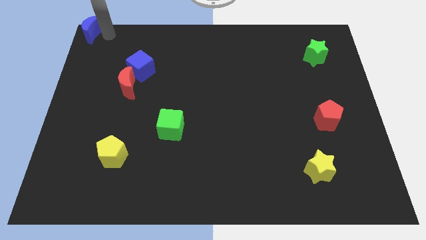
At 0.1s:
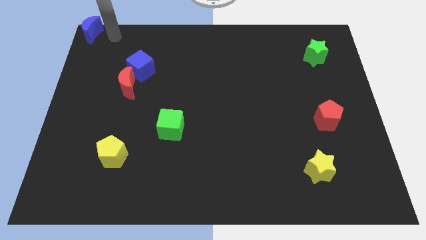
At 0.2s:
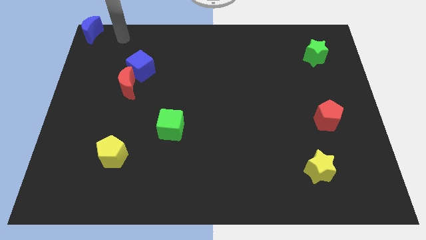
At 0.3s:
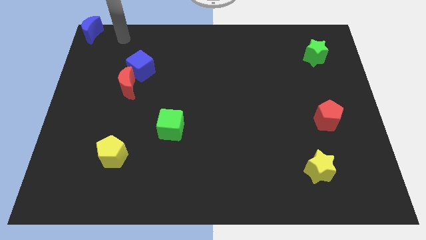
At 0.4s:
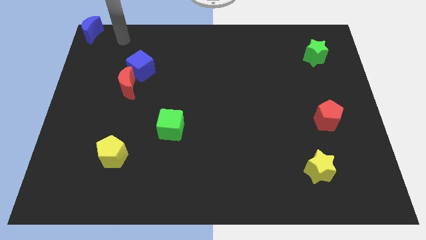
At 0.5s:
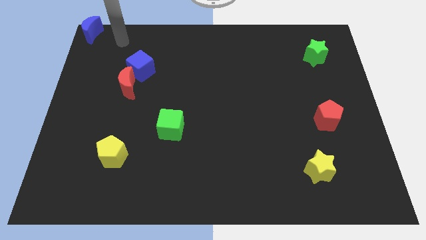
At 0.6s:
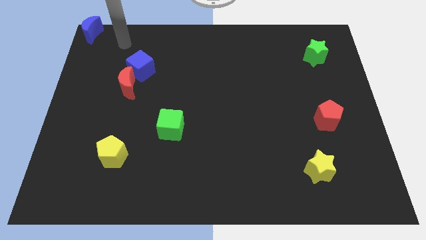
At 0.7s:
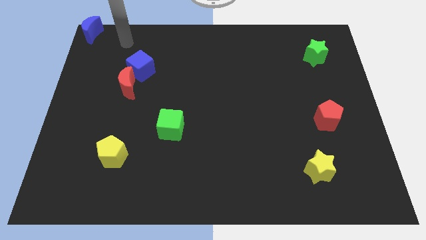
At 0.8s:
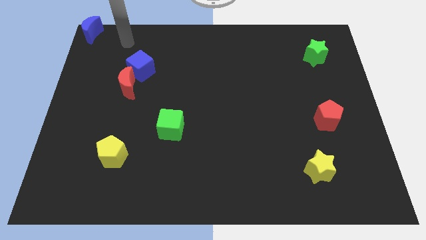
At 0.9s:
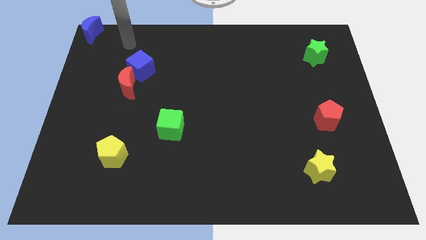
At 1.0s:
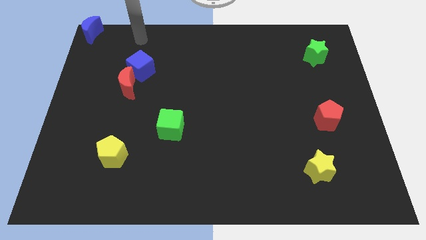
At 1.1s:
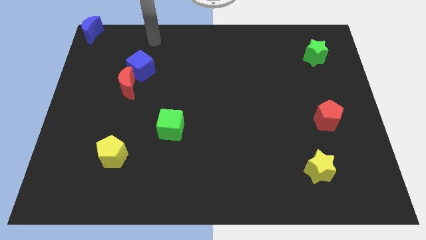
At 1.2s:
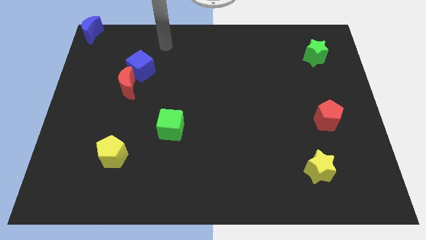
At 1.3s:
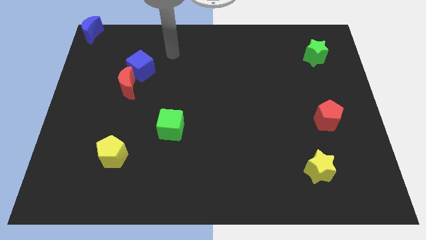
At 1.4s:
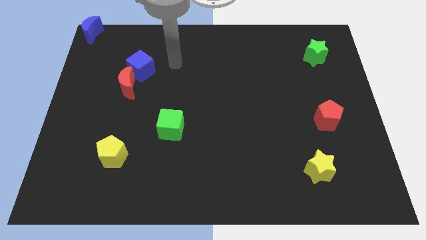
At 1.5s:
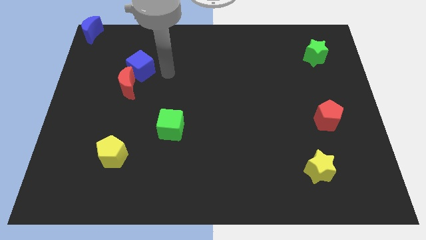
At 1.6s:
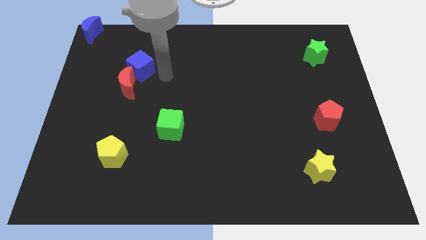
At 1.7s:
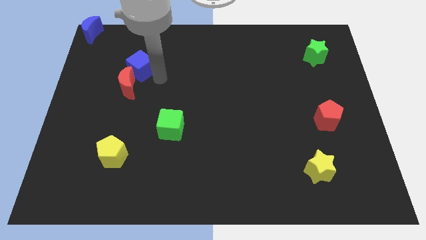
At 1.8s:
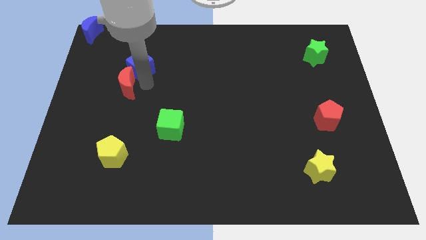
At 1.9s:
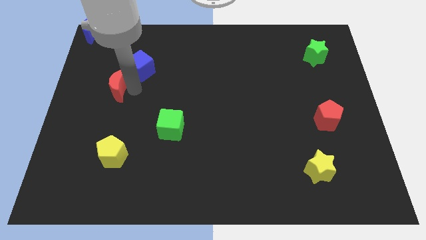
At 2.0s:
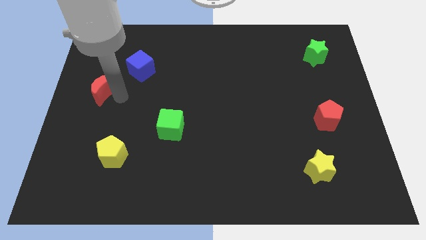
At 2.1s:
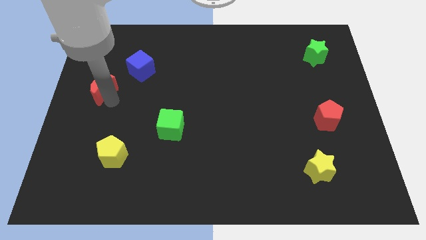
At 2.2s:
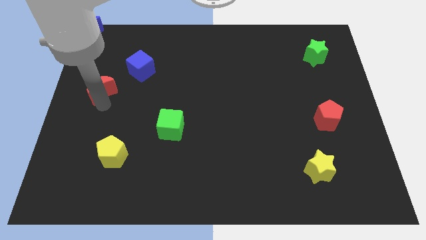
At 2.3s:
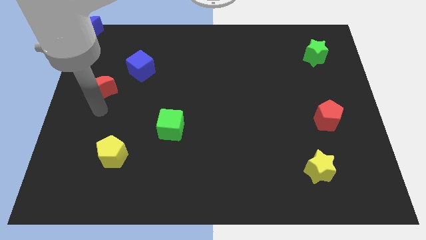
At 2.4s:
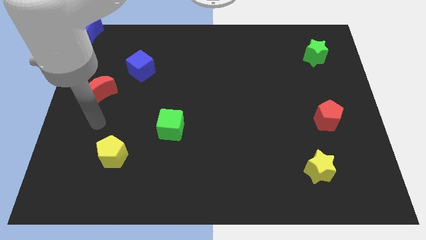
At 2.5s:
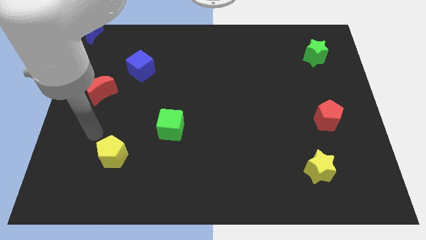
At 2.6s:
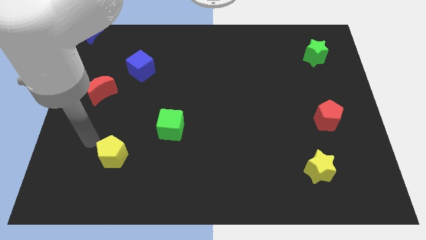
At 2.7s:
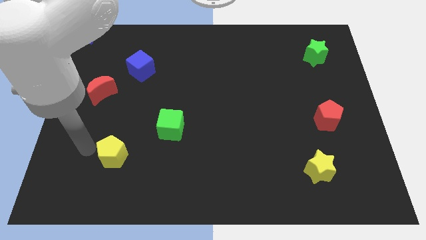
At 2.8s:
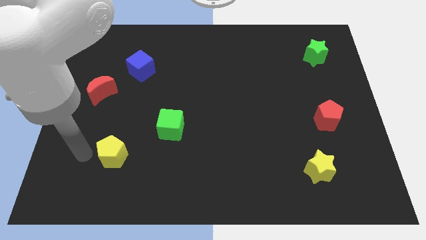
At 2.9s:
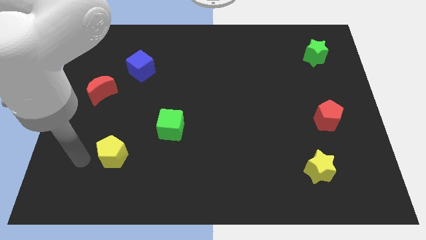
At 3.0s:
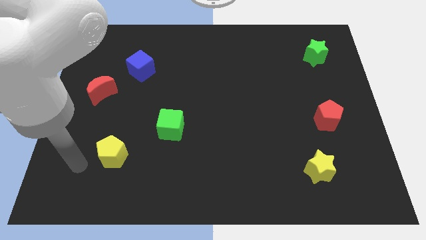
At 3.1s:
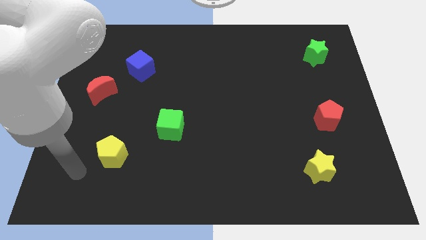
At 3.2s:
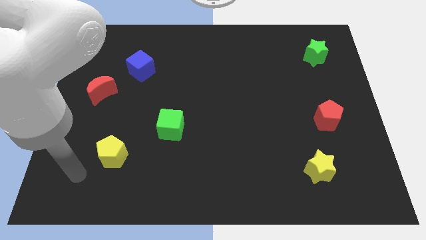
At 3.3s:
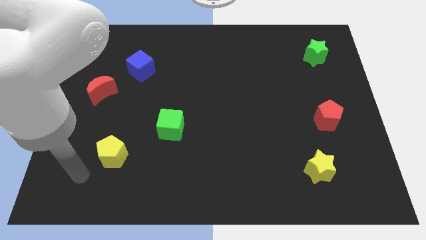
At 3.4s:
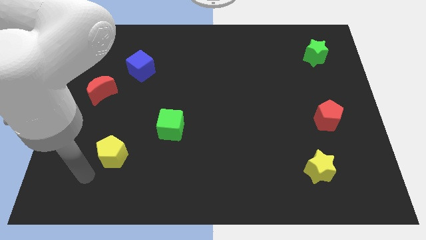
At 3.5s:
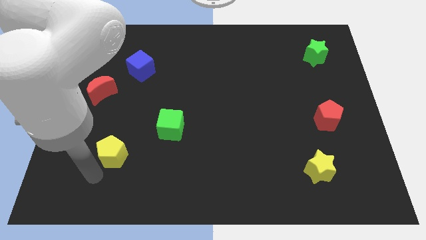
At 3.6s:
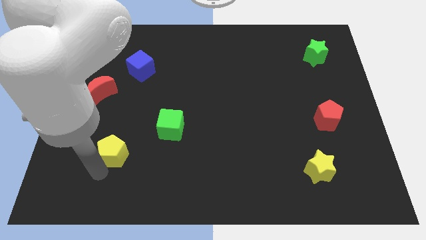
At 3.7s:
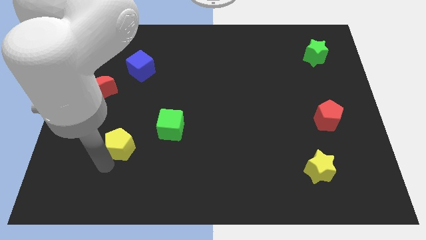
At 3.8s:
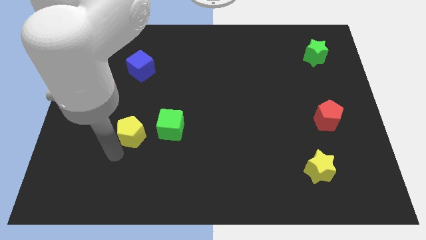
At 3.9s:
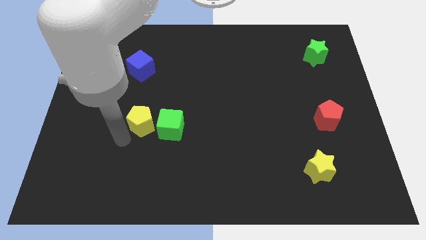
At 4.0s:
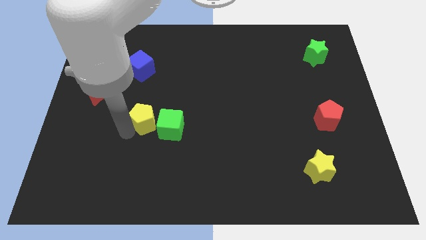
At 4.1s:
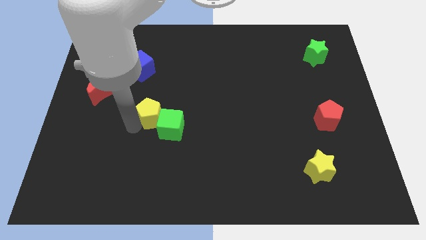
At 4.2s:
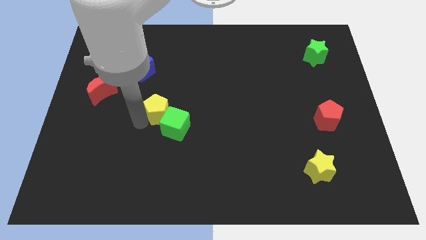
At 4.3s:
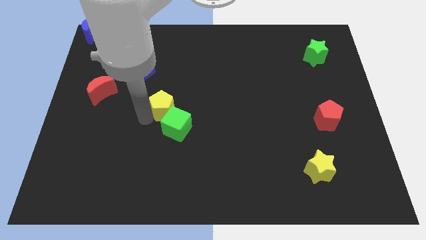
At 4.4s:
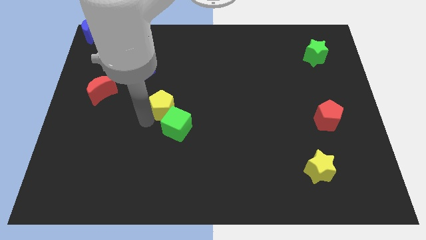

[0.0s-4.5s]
push the yellow pentagon into the green cube

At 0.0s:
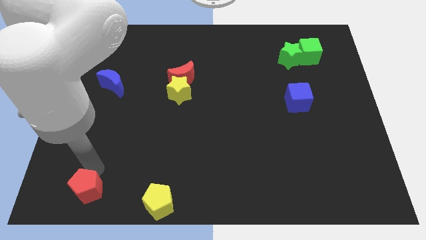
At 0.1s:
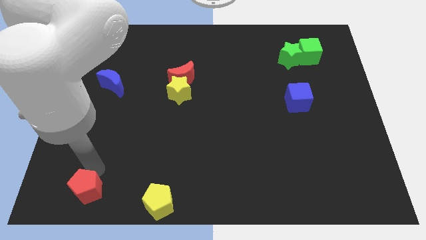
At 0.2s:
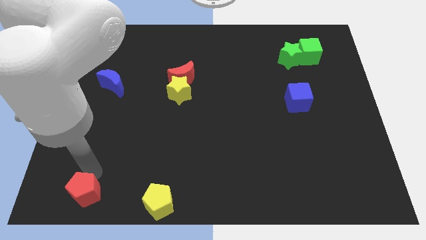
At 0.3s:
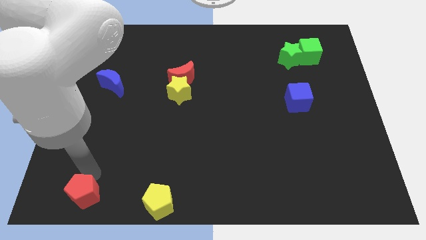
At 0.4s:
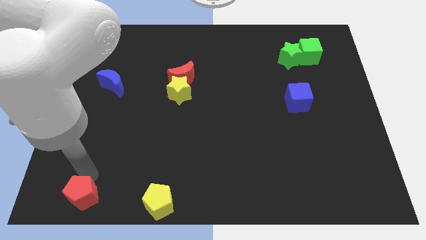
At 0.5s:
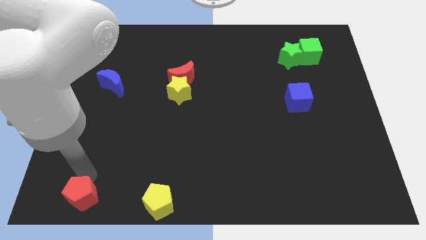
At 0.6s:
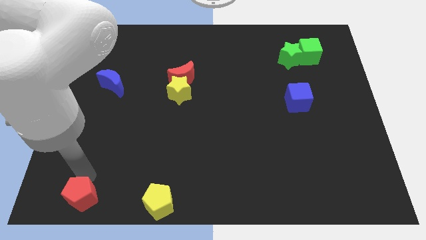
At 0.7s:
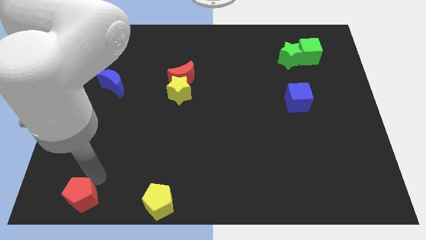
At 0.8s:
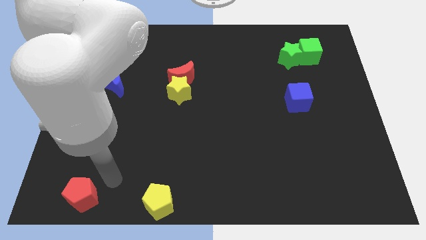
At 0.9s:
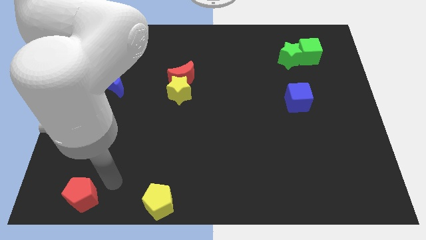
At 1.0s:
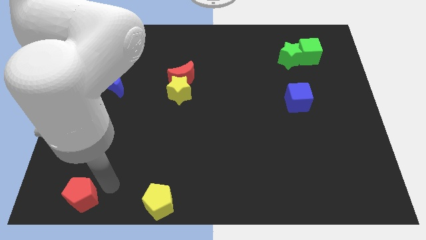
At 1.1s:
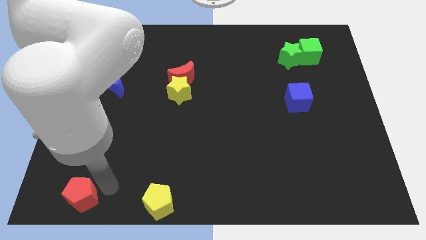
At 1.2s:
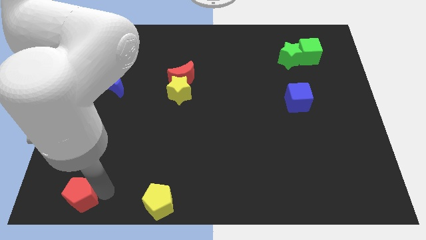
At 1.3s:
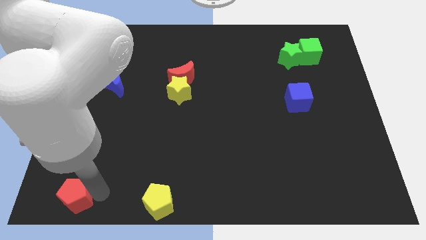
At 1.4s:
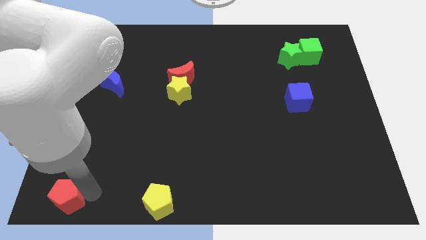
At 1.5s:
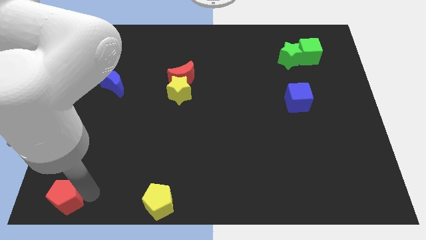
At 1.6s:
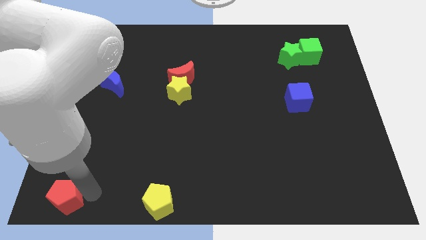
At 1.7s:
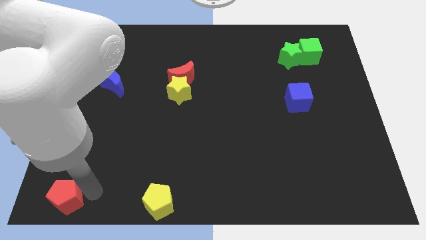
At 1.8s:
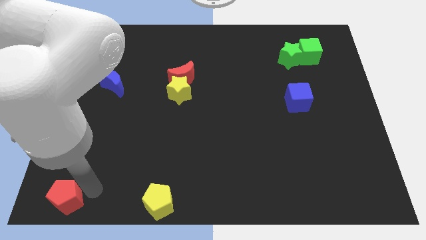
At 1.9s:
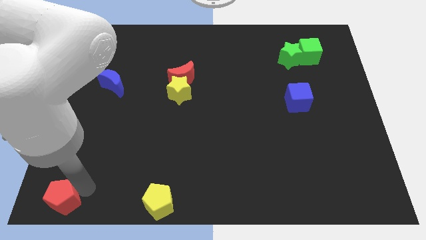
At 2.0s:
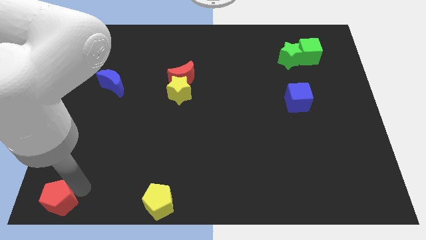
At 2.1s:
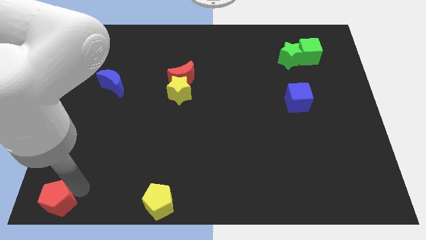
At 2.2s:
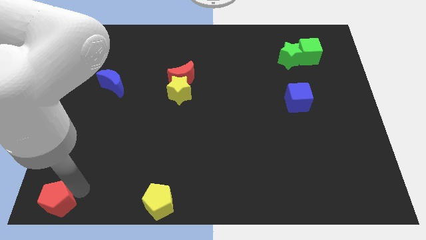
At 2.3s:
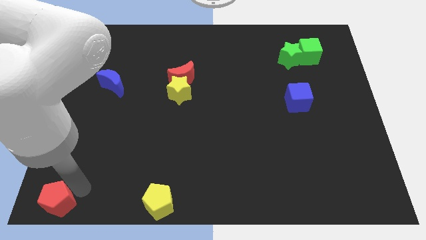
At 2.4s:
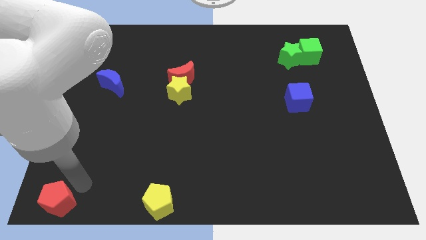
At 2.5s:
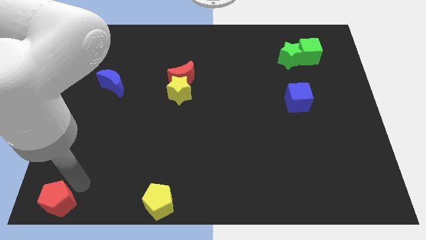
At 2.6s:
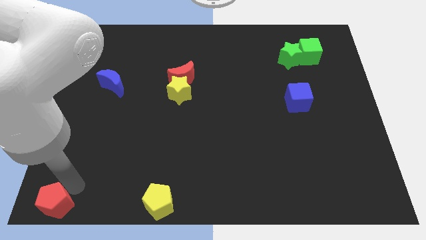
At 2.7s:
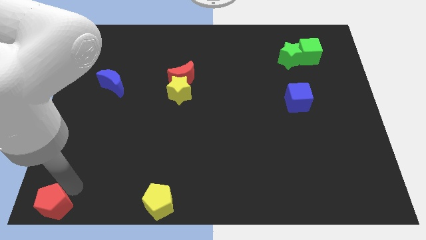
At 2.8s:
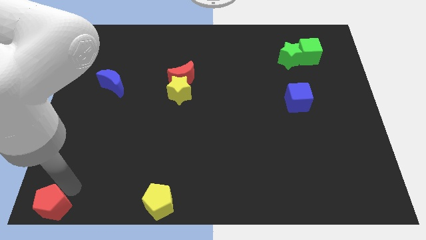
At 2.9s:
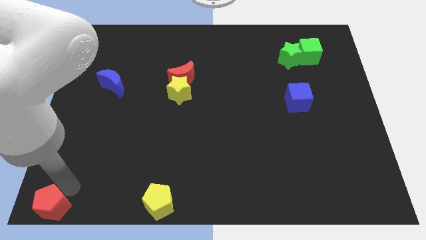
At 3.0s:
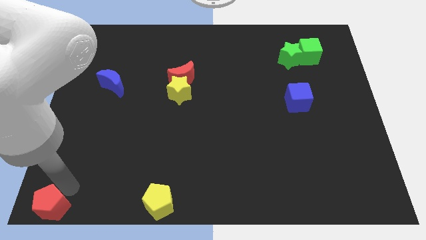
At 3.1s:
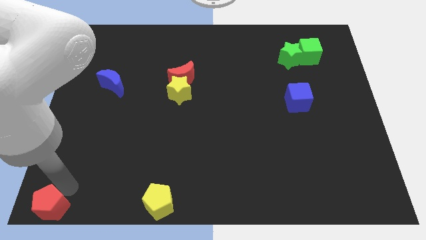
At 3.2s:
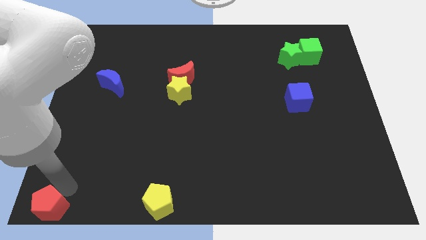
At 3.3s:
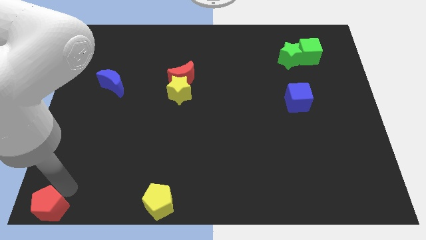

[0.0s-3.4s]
move the red pentagon to bottom left

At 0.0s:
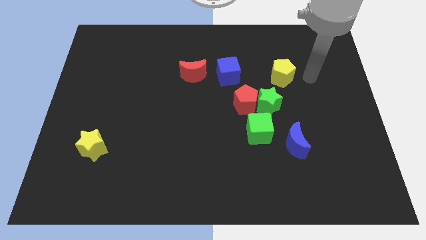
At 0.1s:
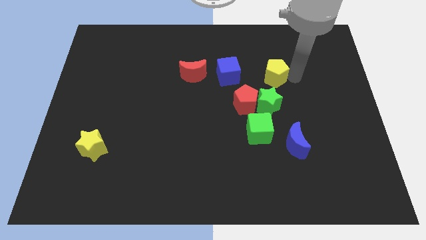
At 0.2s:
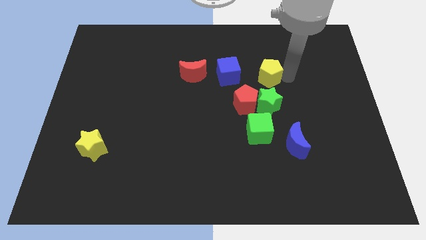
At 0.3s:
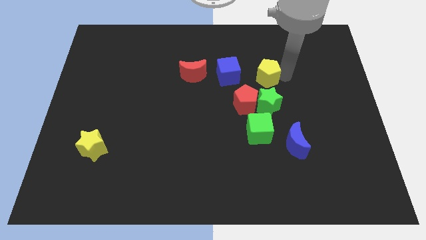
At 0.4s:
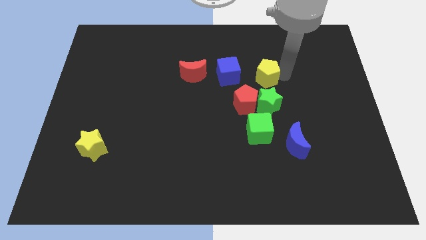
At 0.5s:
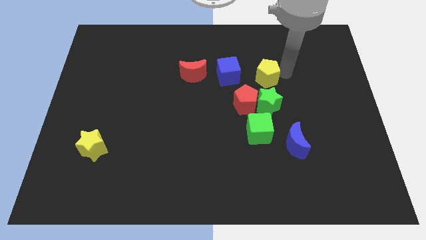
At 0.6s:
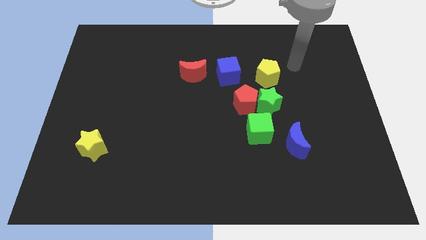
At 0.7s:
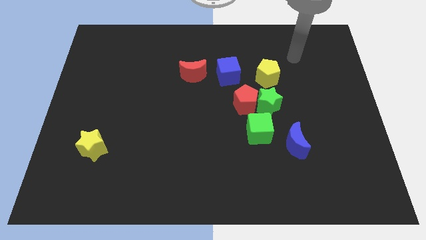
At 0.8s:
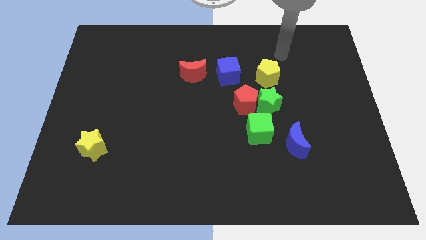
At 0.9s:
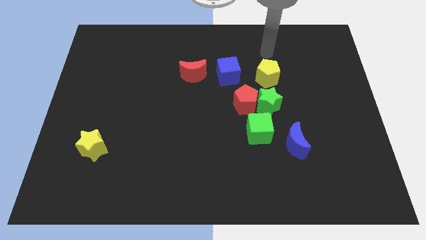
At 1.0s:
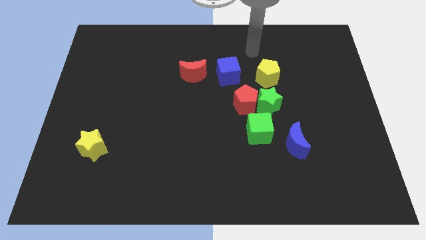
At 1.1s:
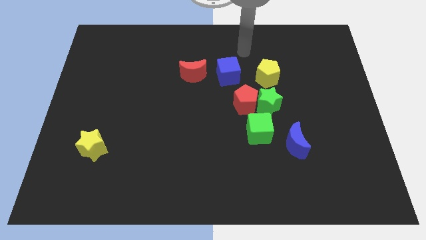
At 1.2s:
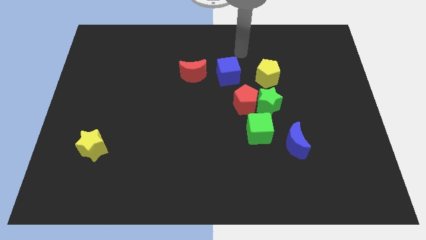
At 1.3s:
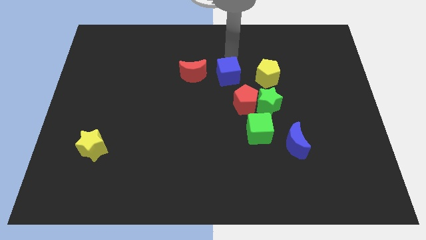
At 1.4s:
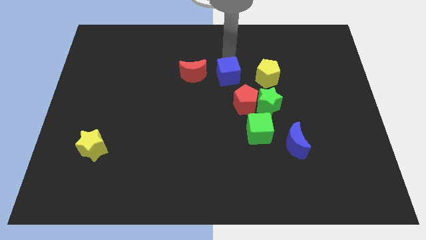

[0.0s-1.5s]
move the yellow pentagon above the green star
